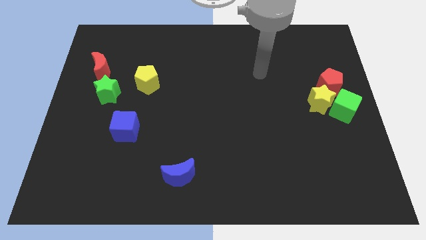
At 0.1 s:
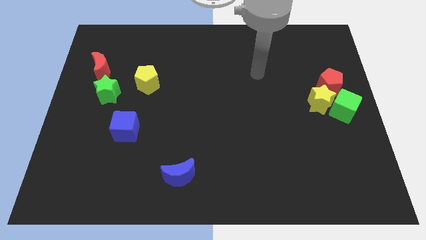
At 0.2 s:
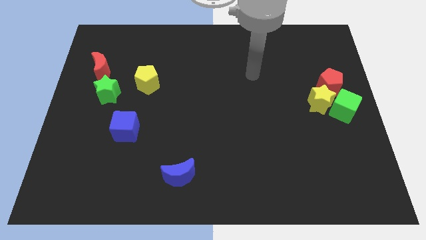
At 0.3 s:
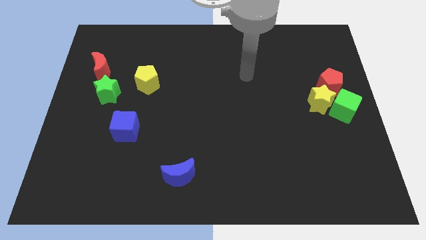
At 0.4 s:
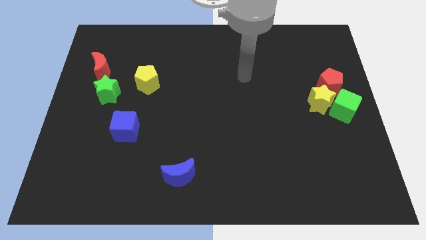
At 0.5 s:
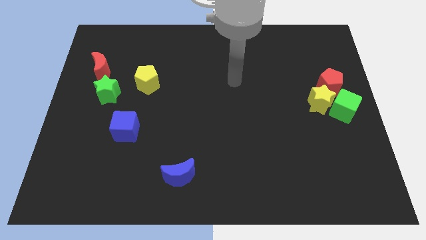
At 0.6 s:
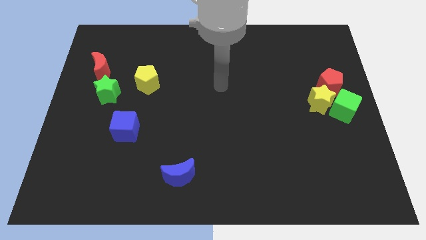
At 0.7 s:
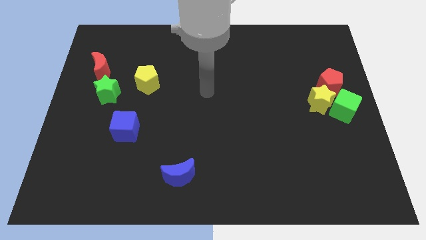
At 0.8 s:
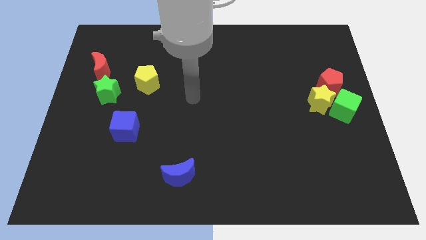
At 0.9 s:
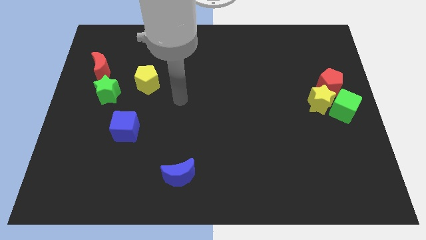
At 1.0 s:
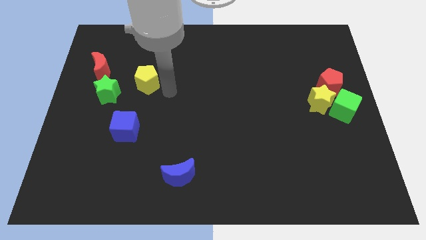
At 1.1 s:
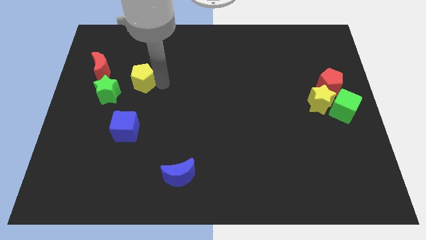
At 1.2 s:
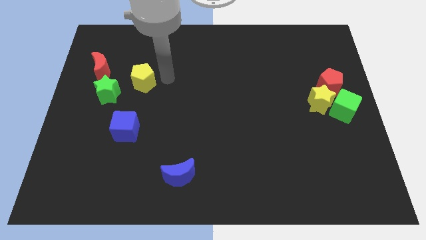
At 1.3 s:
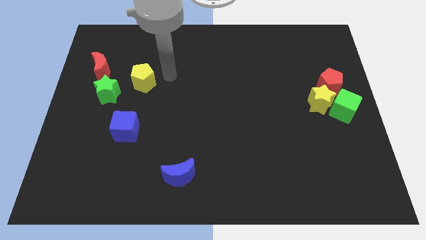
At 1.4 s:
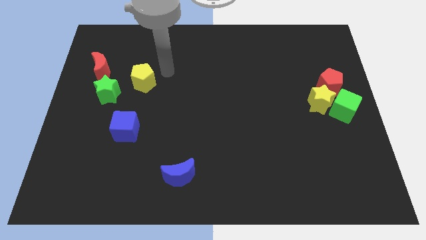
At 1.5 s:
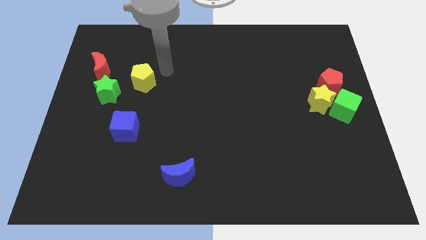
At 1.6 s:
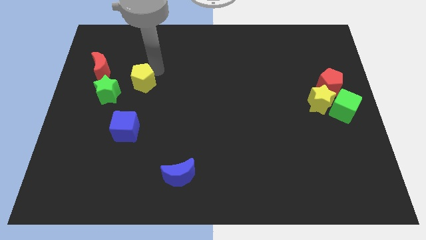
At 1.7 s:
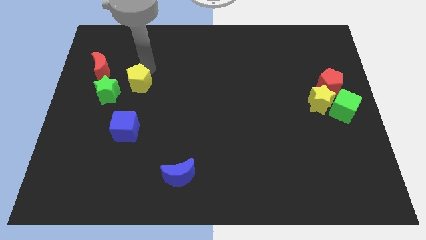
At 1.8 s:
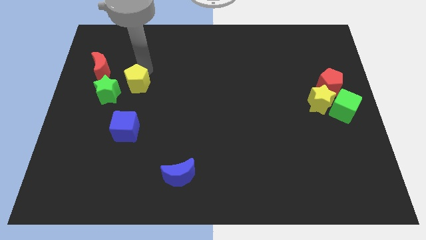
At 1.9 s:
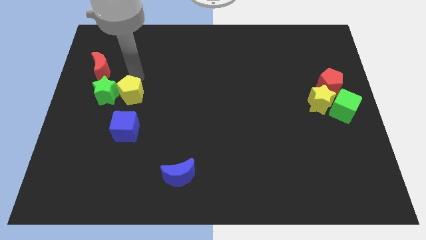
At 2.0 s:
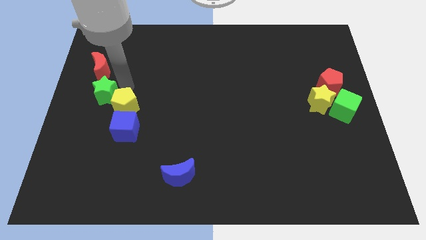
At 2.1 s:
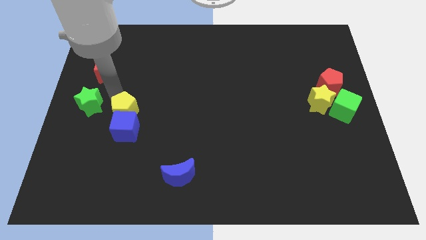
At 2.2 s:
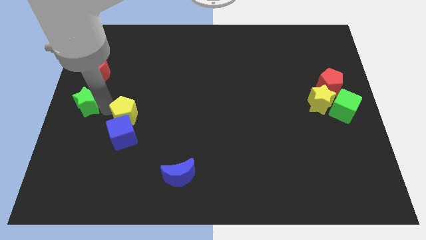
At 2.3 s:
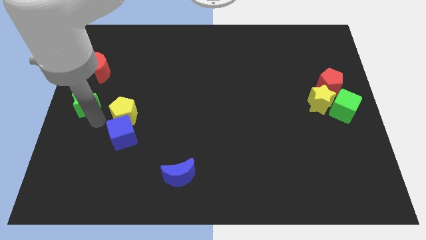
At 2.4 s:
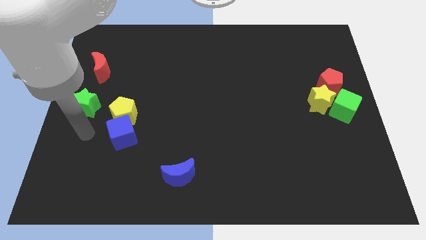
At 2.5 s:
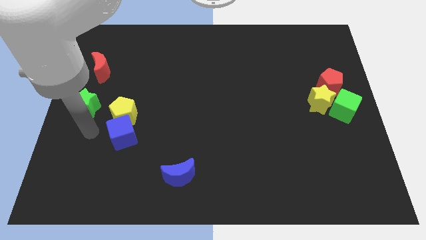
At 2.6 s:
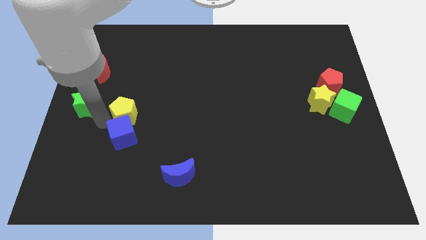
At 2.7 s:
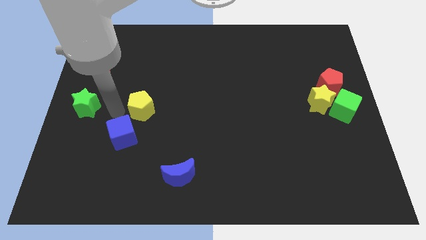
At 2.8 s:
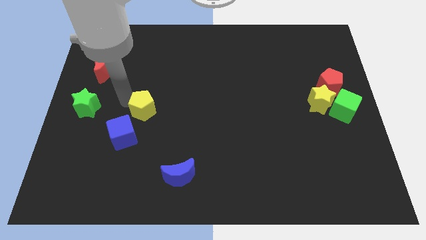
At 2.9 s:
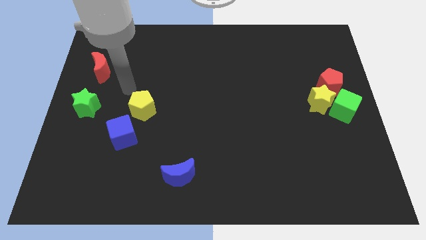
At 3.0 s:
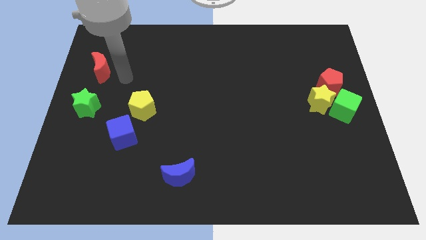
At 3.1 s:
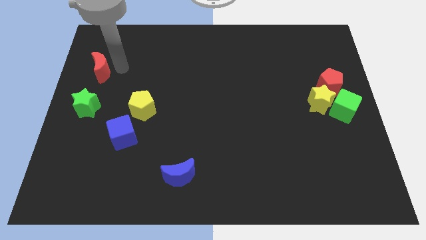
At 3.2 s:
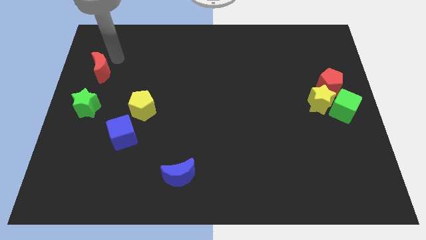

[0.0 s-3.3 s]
push the yellow pentagon into the blue cube

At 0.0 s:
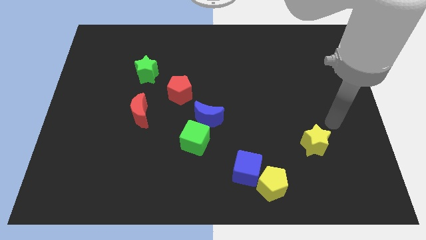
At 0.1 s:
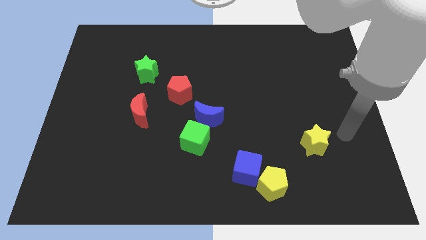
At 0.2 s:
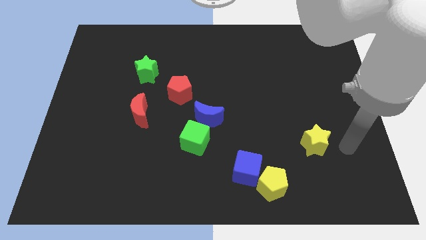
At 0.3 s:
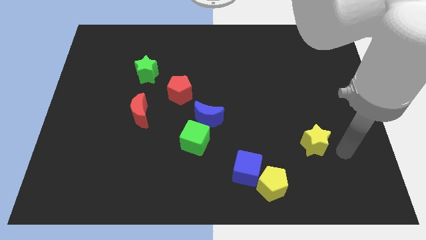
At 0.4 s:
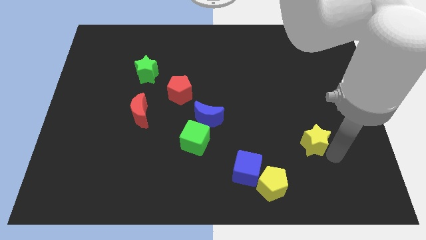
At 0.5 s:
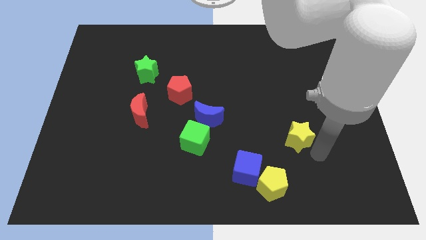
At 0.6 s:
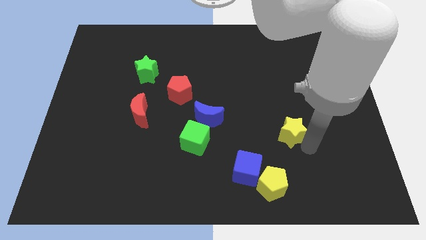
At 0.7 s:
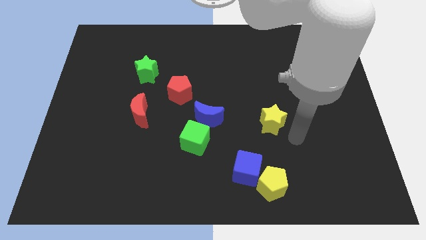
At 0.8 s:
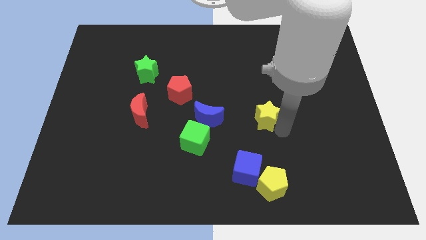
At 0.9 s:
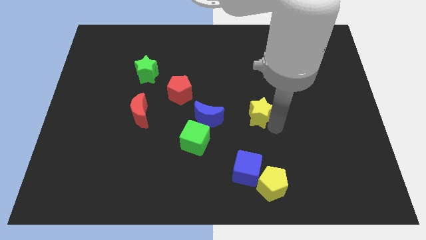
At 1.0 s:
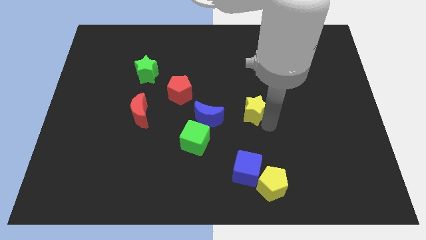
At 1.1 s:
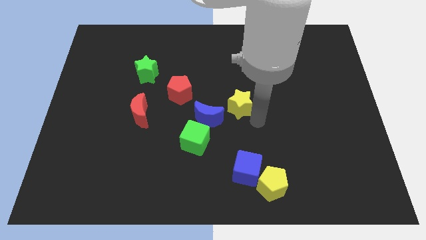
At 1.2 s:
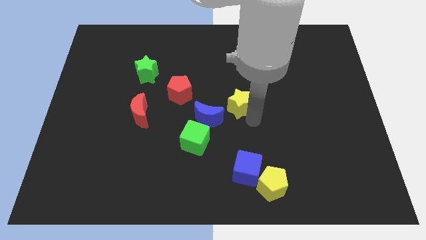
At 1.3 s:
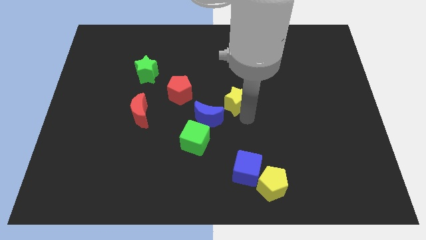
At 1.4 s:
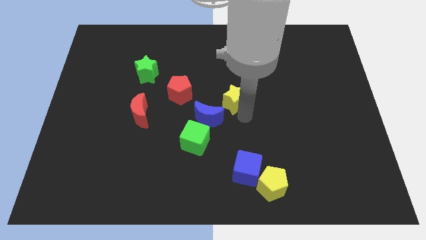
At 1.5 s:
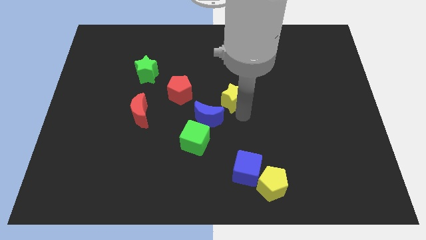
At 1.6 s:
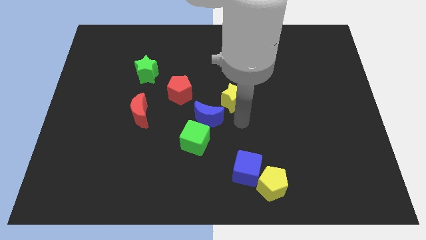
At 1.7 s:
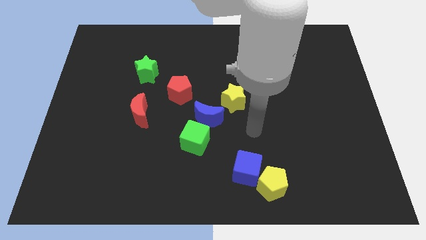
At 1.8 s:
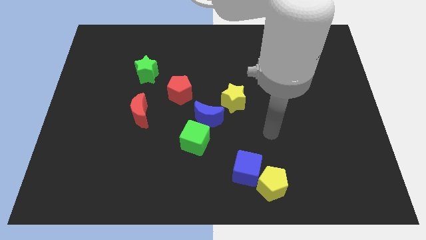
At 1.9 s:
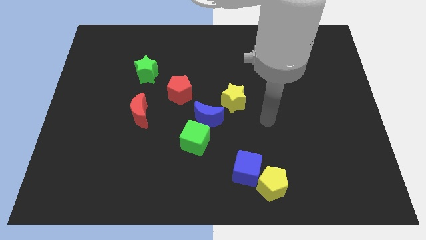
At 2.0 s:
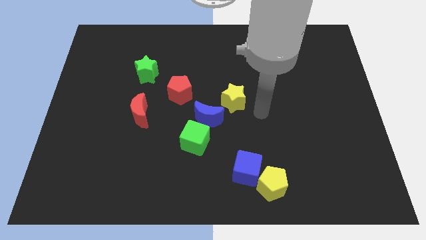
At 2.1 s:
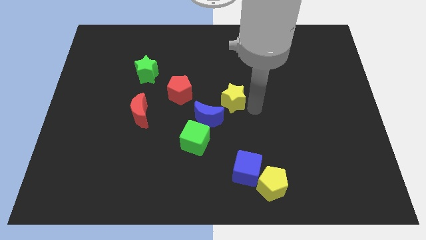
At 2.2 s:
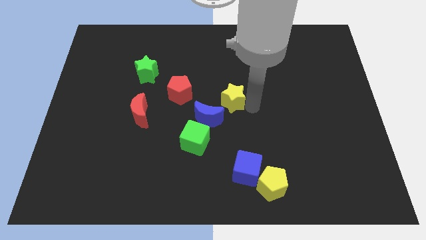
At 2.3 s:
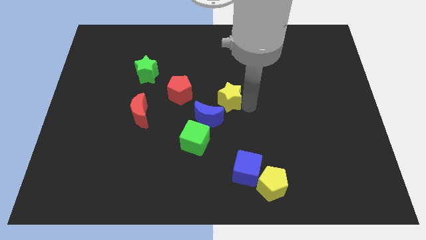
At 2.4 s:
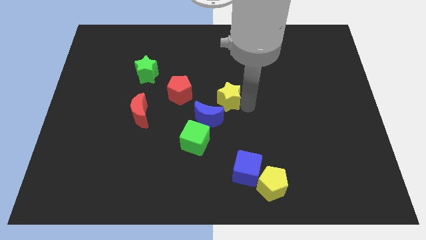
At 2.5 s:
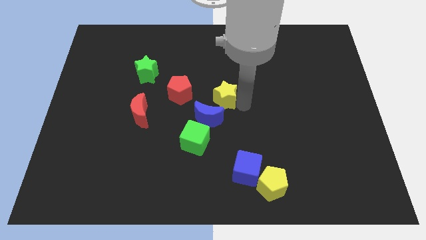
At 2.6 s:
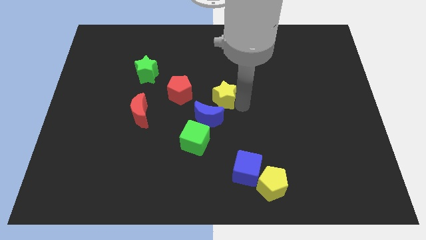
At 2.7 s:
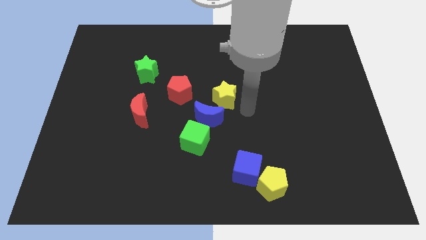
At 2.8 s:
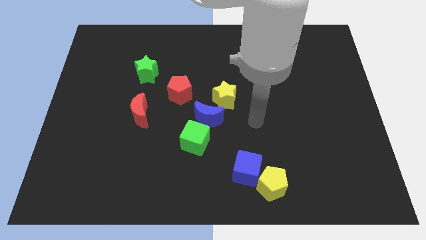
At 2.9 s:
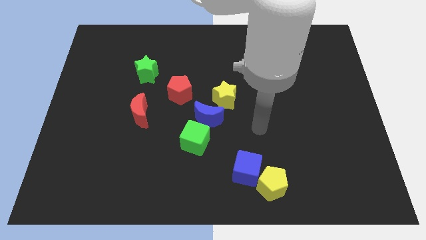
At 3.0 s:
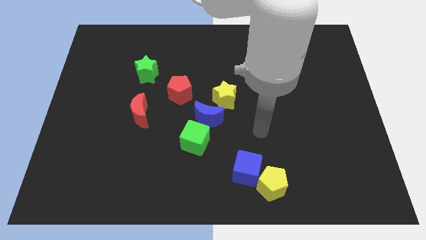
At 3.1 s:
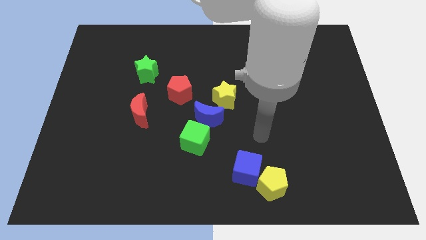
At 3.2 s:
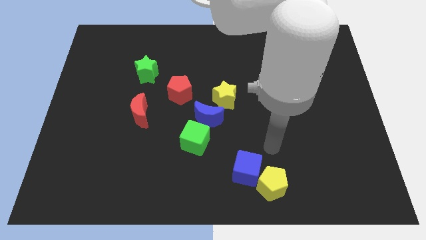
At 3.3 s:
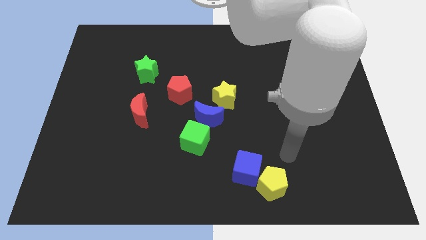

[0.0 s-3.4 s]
move the yellow star above the blue moon

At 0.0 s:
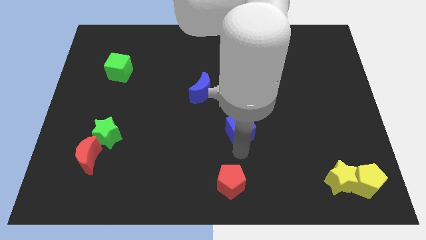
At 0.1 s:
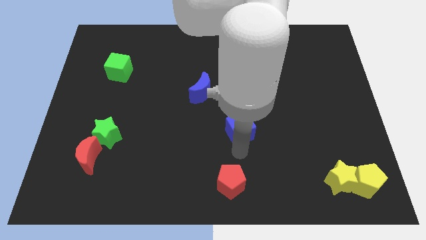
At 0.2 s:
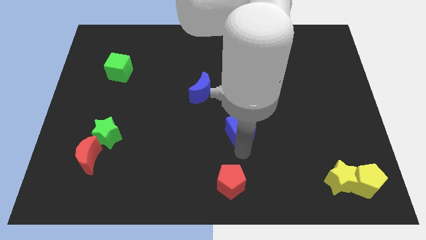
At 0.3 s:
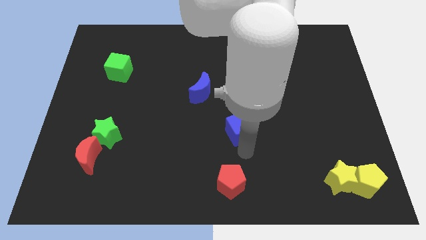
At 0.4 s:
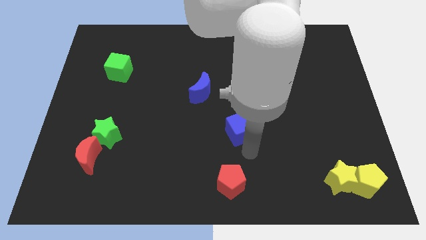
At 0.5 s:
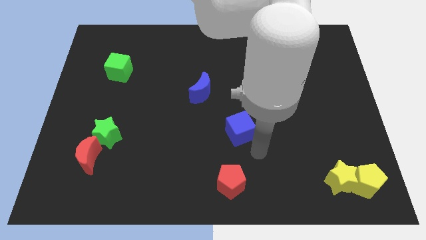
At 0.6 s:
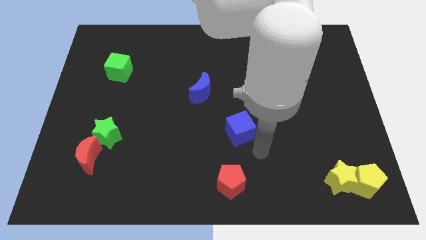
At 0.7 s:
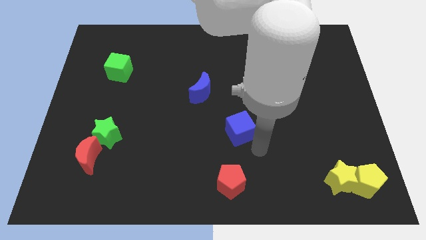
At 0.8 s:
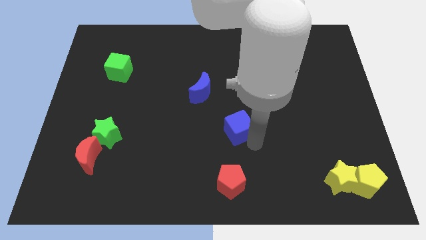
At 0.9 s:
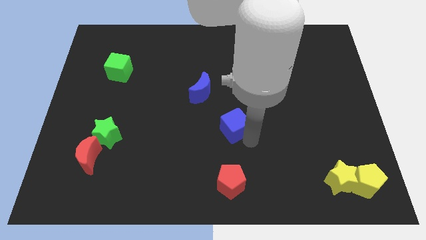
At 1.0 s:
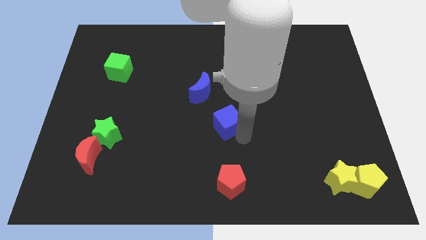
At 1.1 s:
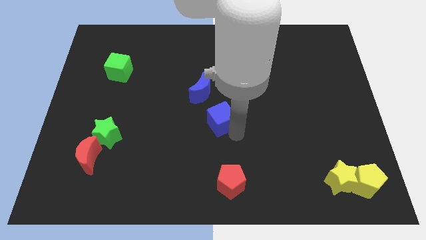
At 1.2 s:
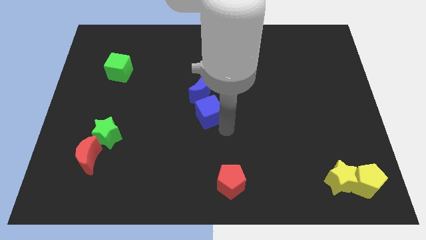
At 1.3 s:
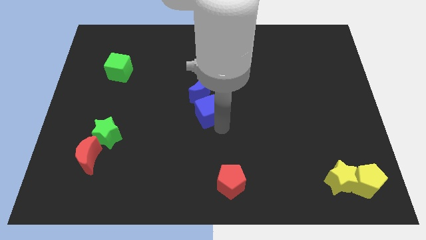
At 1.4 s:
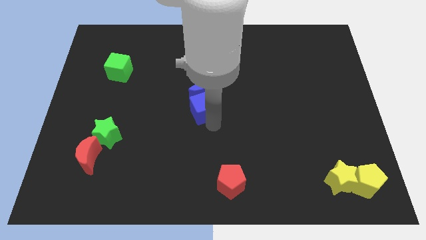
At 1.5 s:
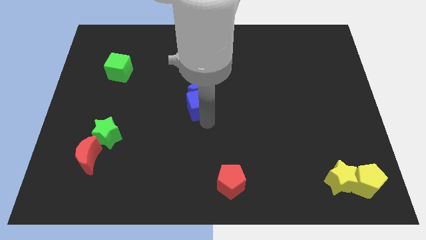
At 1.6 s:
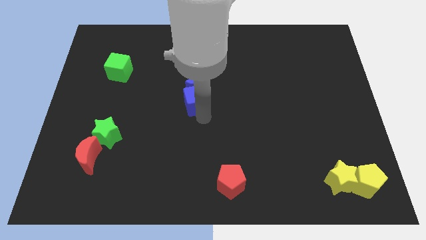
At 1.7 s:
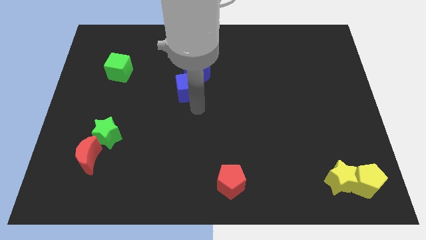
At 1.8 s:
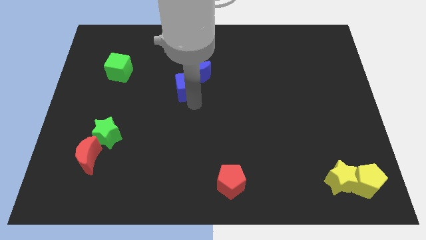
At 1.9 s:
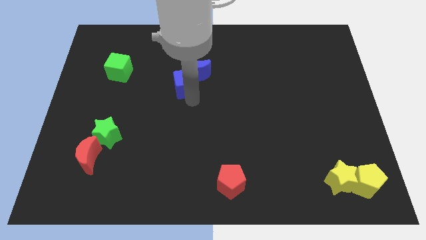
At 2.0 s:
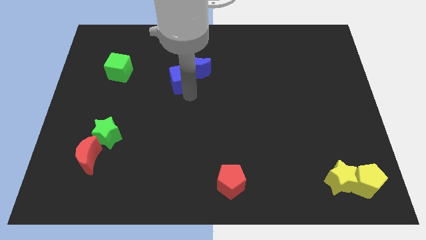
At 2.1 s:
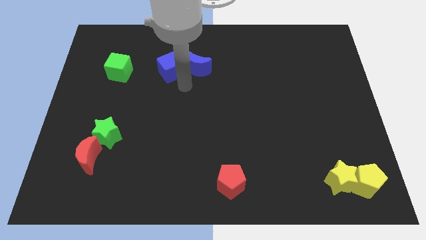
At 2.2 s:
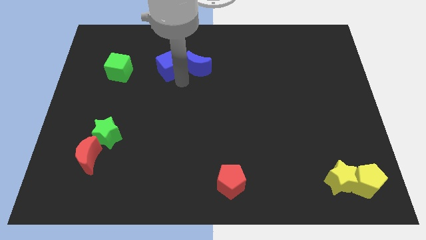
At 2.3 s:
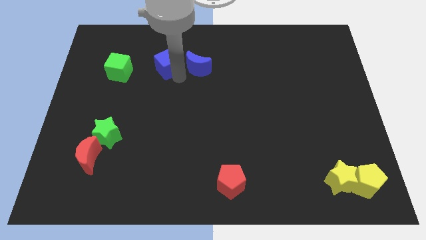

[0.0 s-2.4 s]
move the blue cube left beside the blue moon
